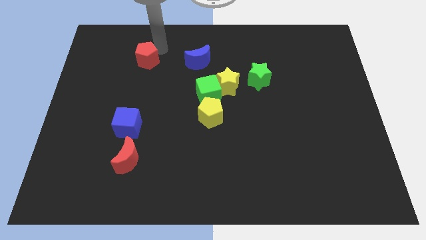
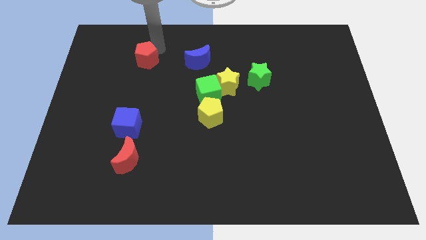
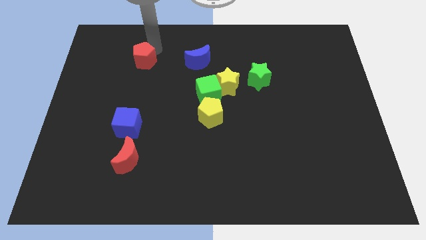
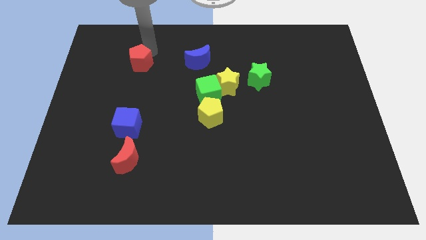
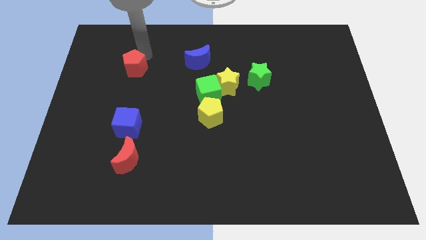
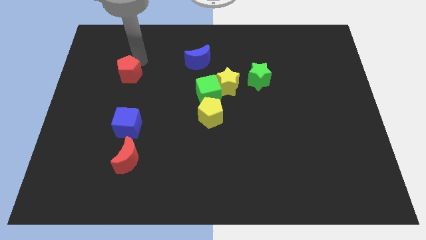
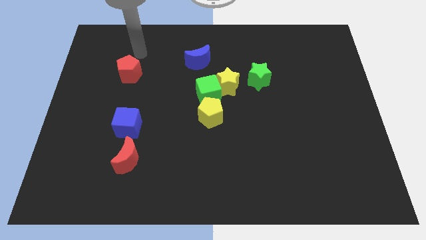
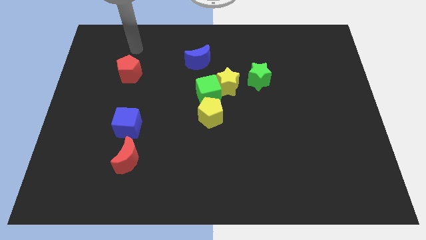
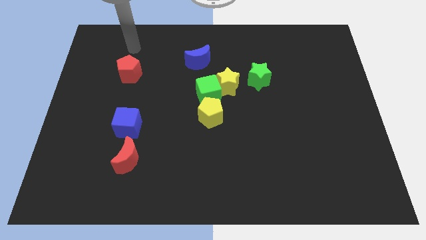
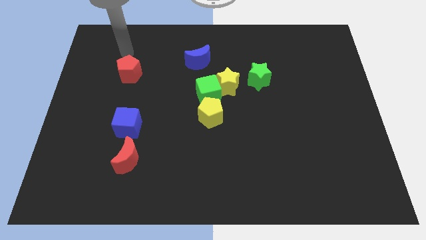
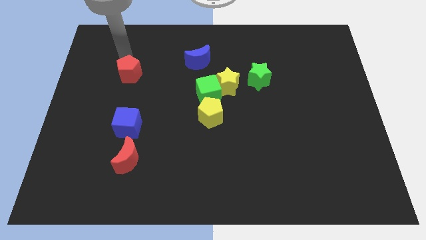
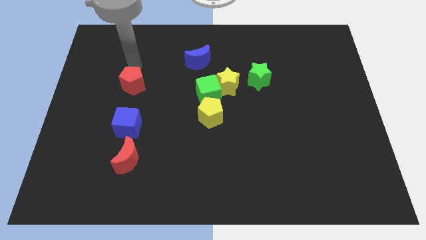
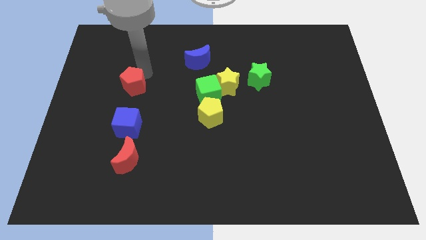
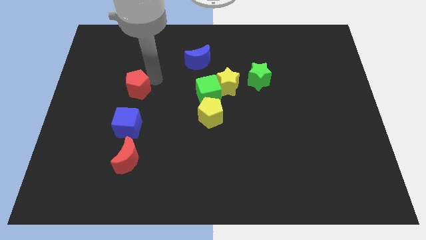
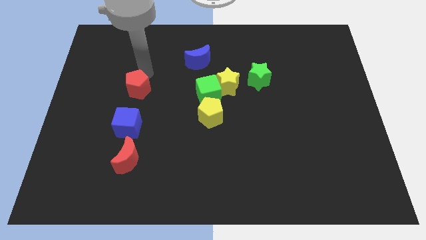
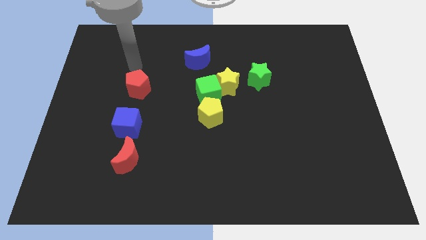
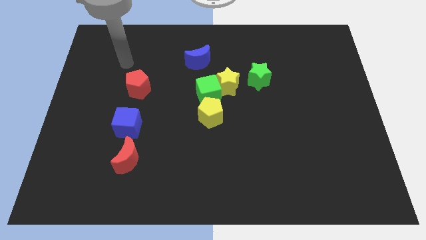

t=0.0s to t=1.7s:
slide the red pentagon towards the blue cube

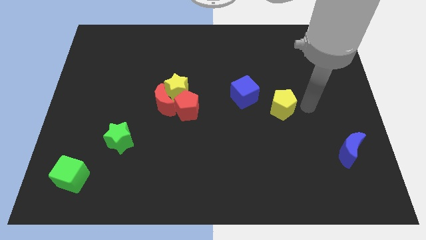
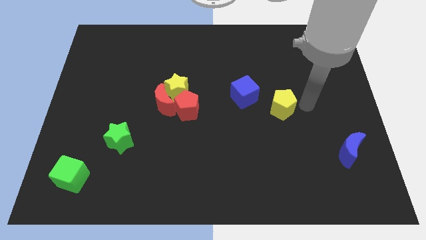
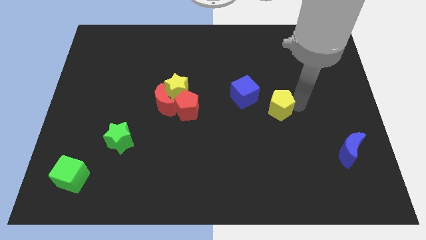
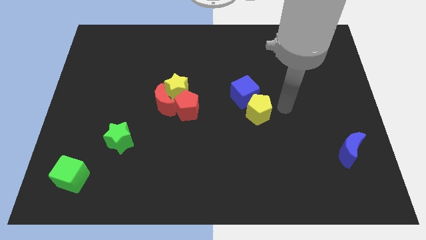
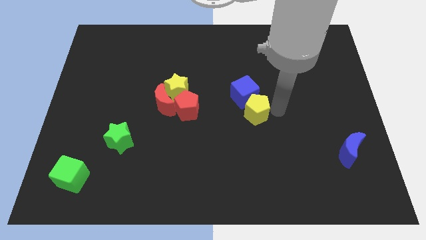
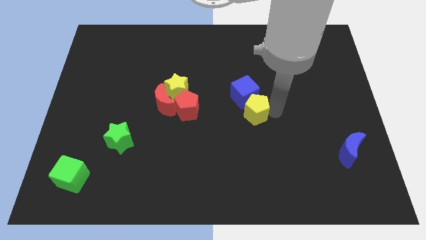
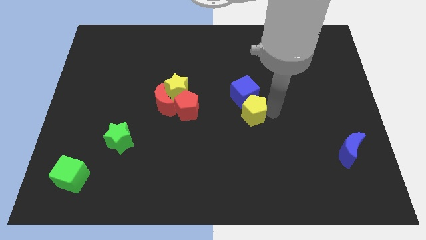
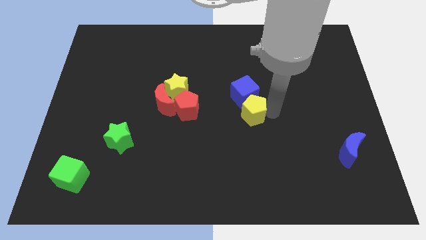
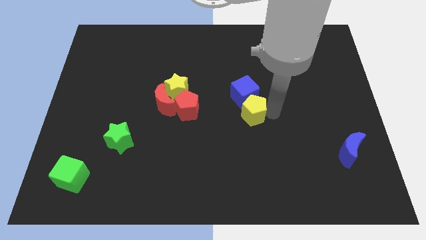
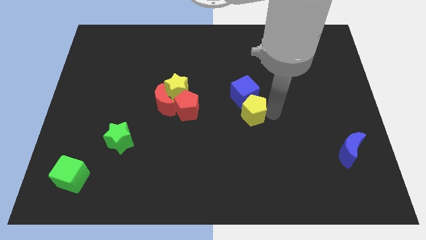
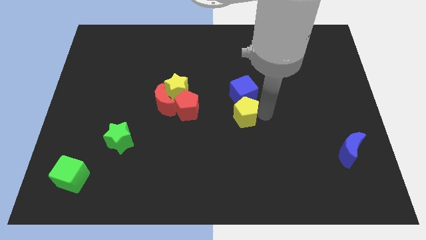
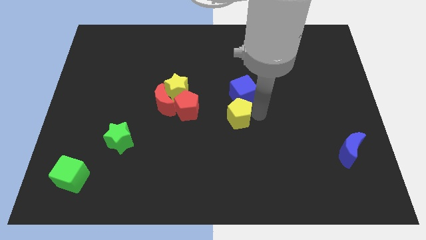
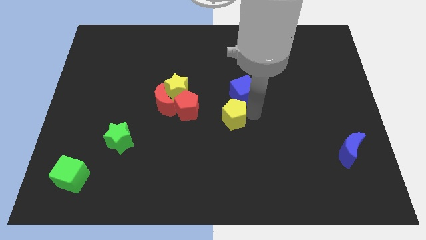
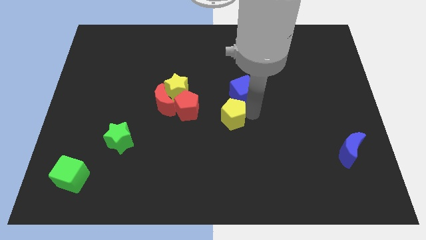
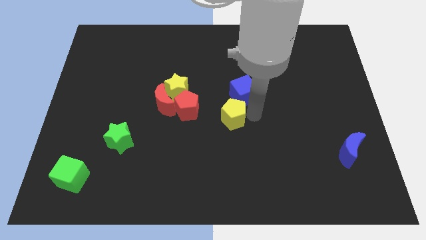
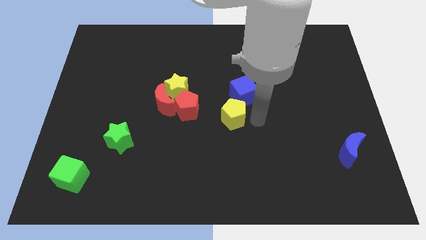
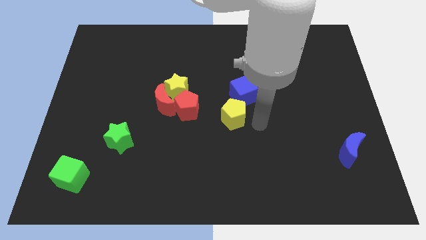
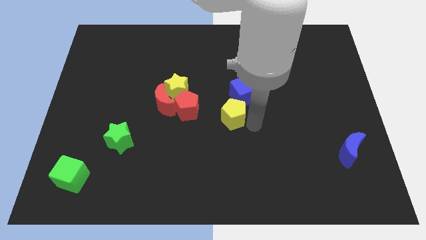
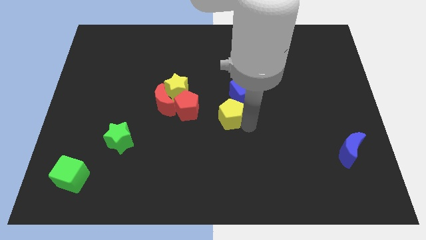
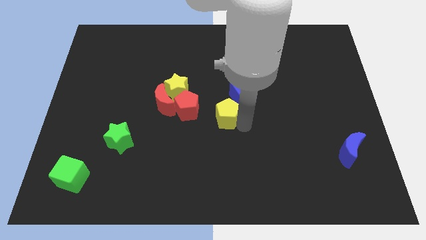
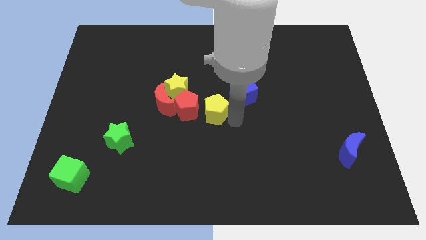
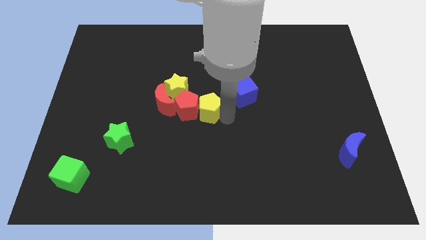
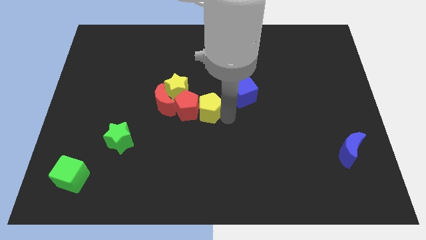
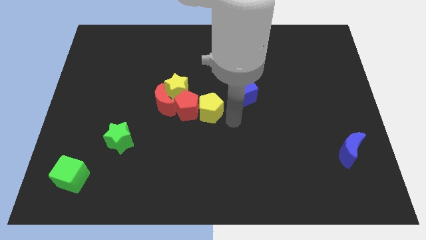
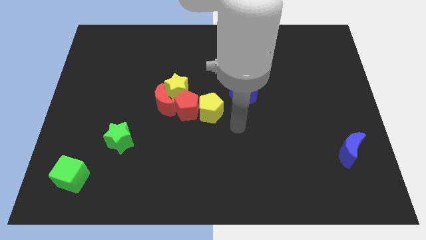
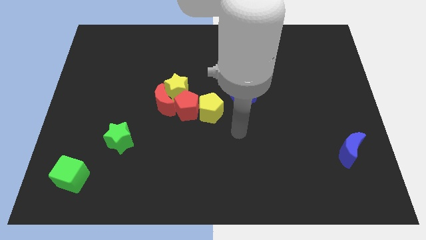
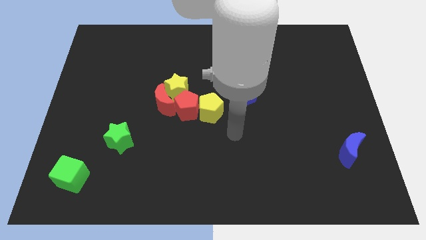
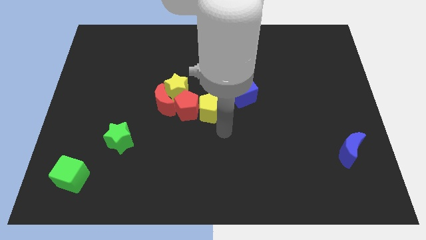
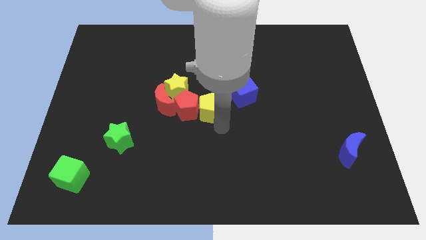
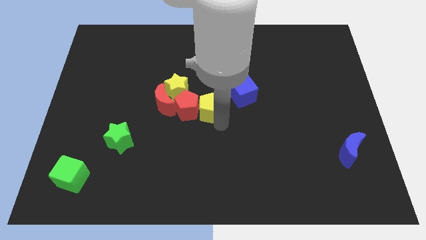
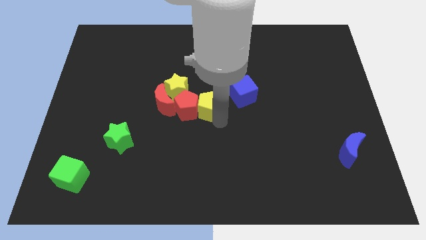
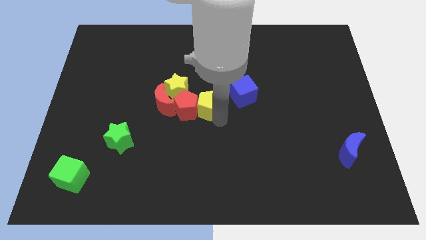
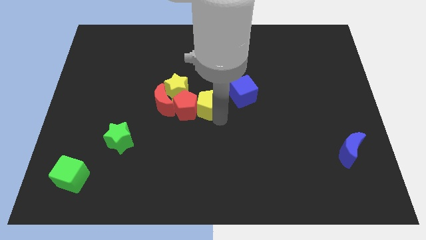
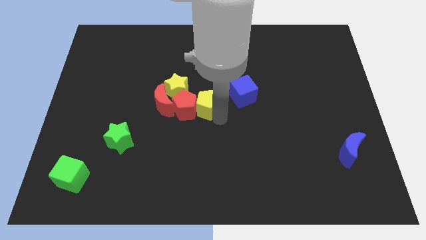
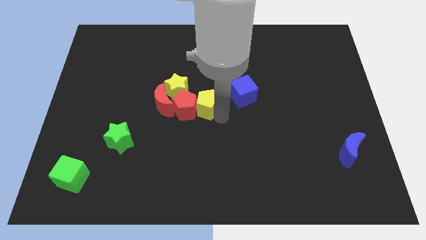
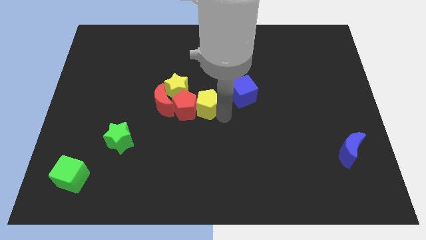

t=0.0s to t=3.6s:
push the yellow pentagon into the red pentagon

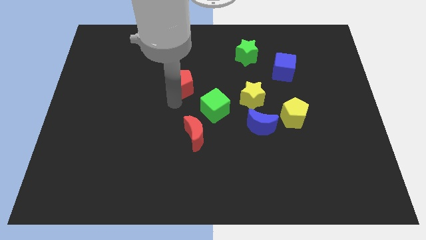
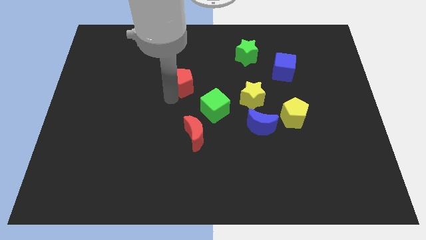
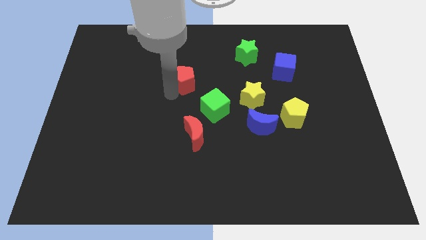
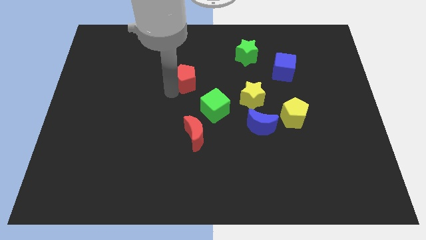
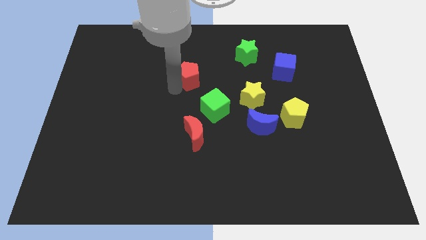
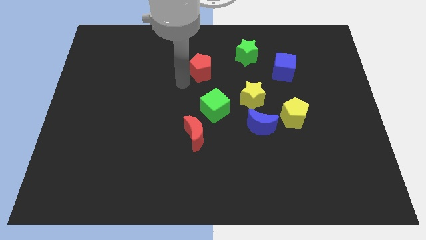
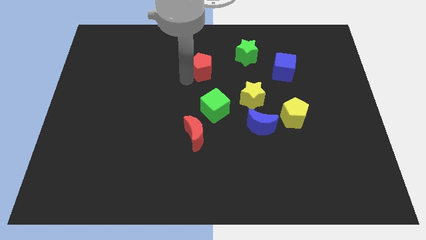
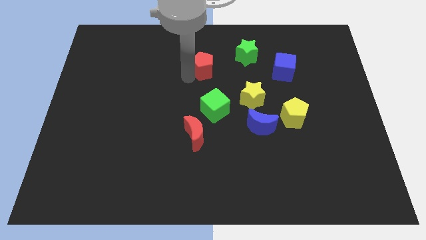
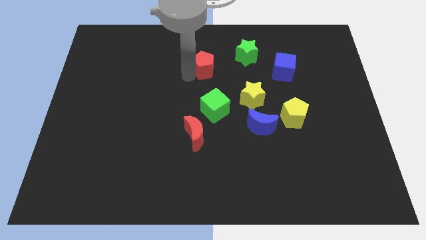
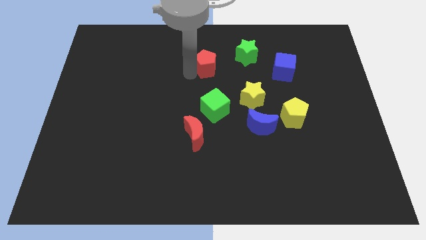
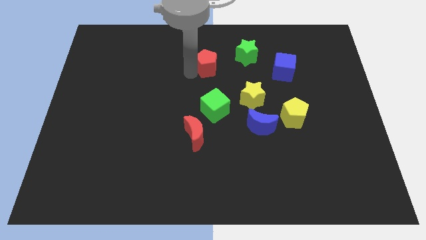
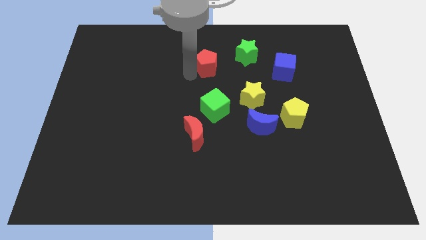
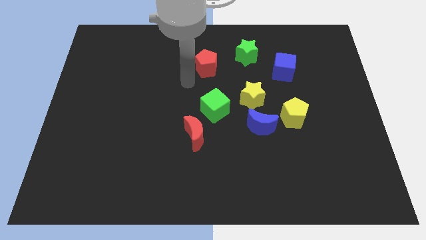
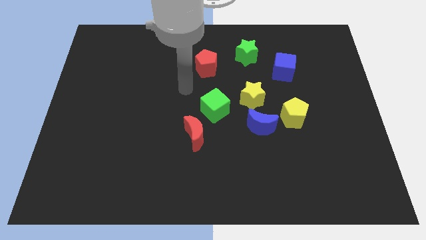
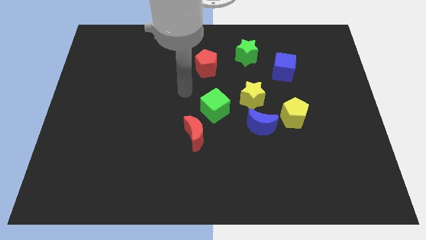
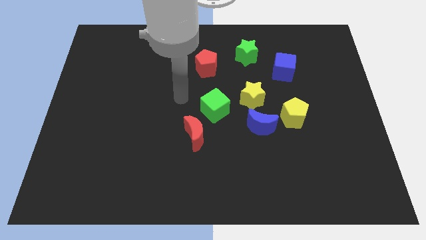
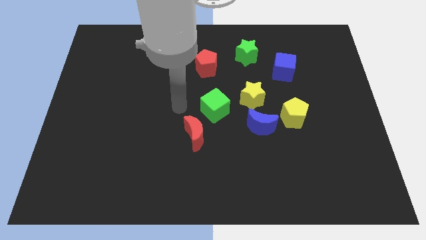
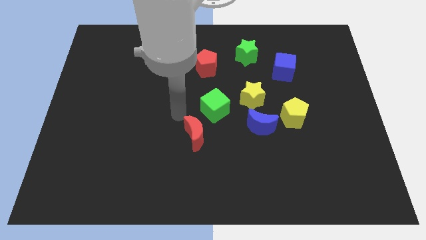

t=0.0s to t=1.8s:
move the red pentagon horizontally to the left side of the blue cube

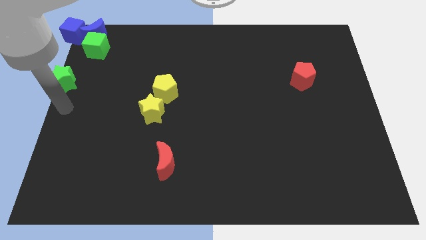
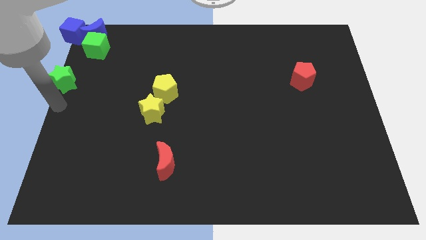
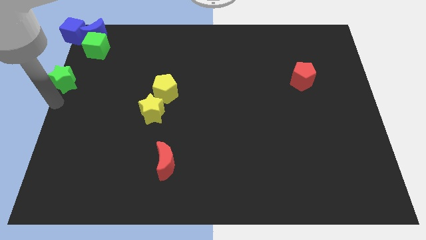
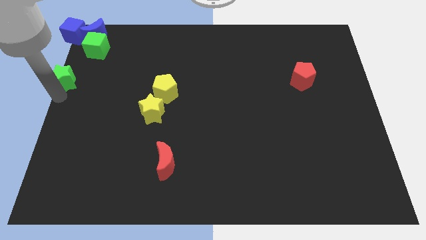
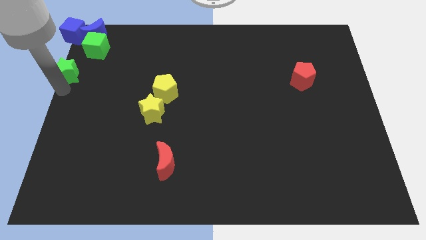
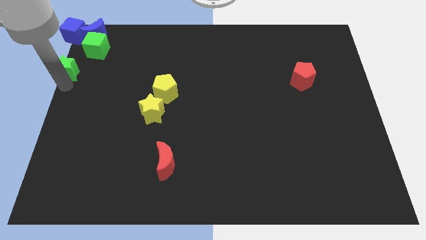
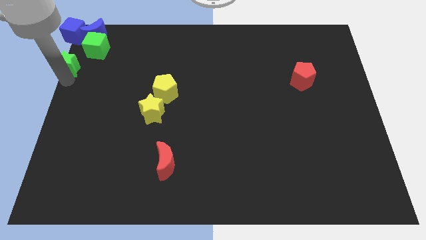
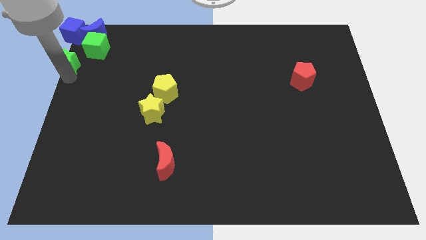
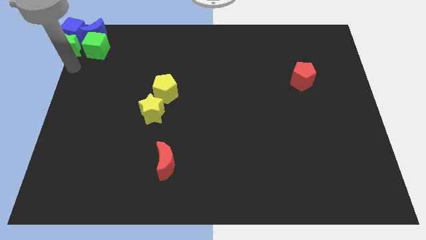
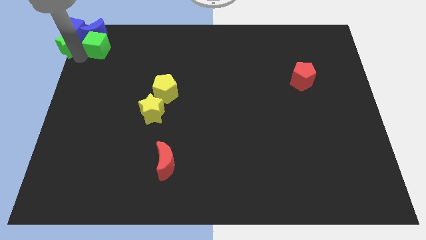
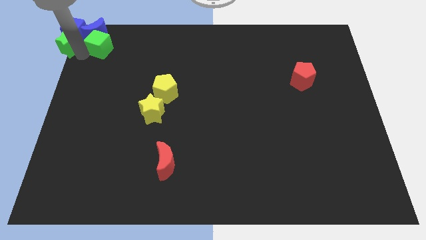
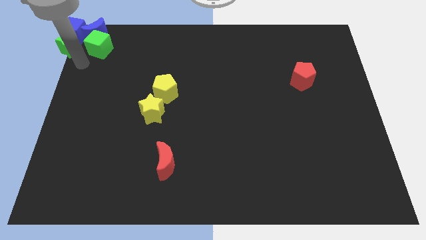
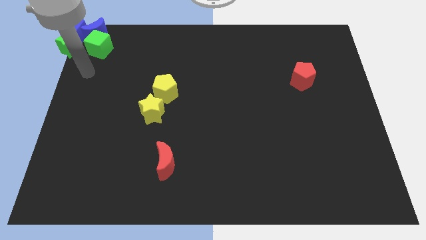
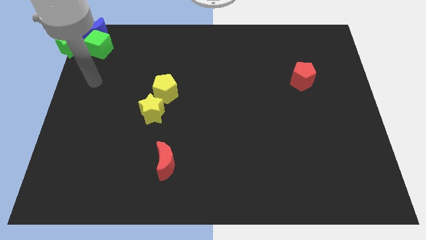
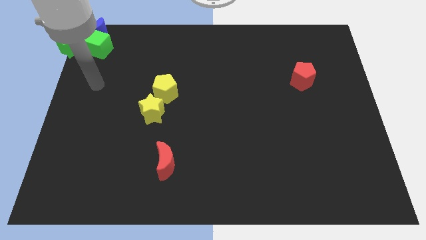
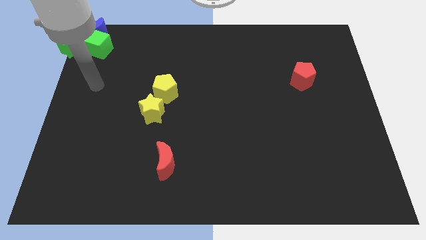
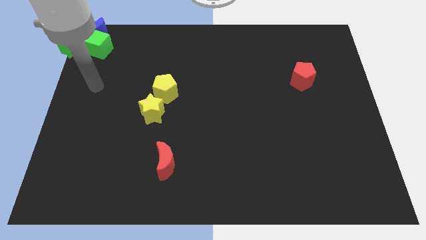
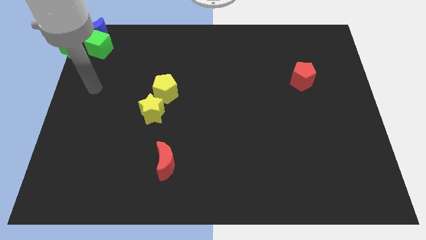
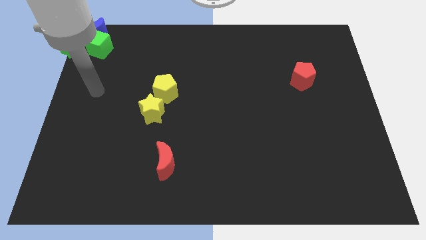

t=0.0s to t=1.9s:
push the green star into the blue cube
